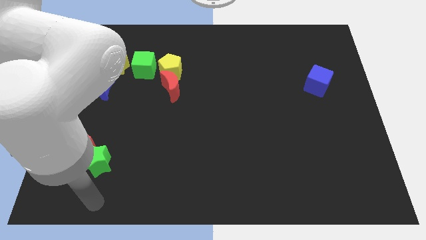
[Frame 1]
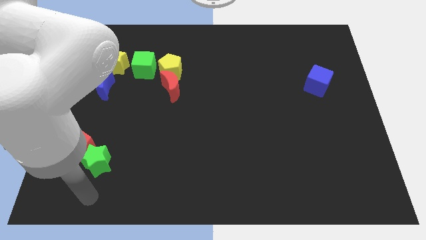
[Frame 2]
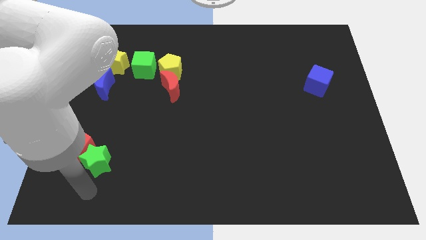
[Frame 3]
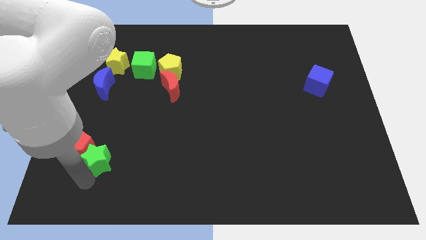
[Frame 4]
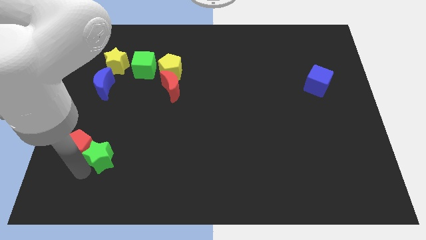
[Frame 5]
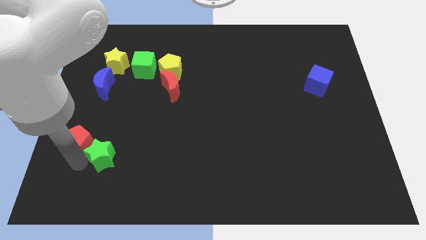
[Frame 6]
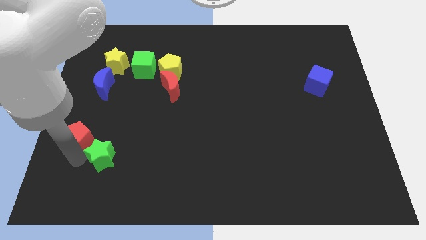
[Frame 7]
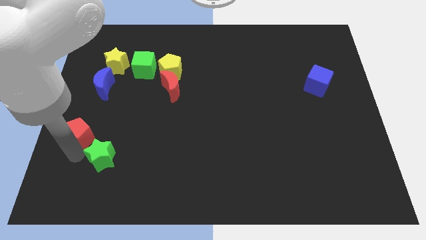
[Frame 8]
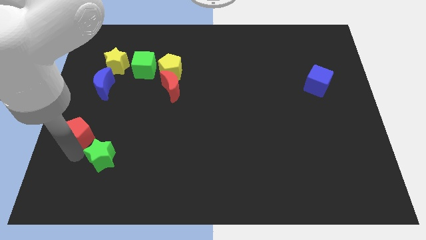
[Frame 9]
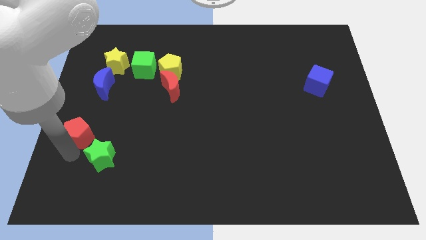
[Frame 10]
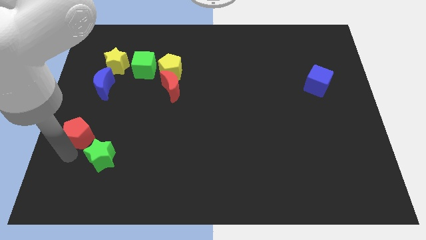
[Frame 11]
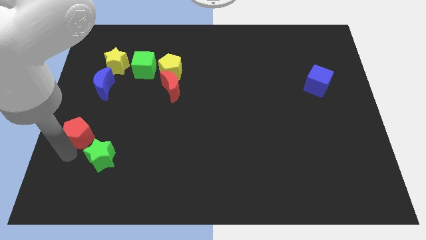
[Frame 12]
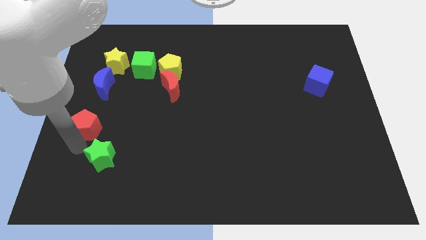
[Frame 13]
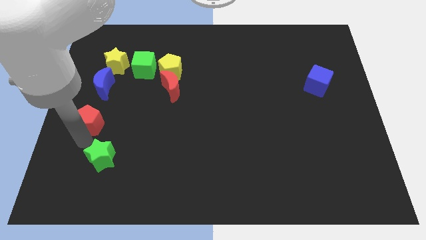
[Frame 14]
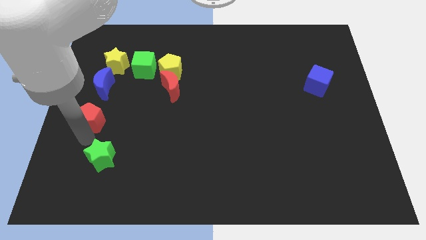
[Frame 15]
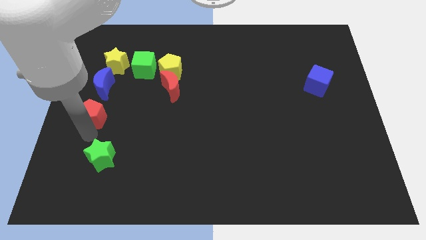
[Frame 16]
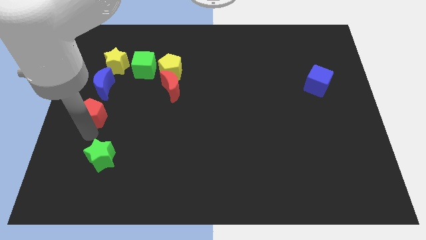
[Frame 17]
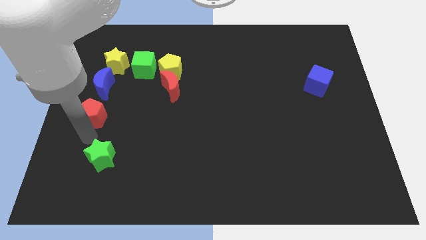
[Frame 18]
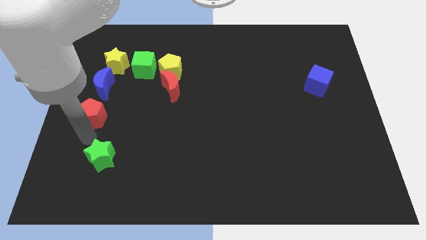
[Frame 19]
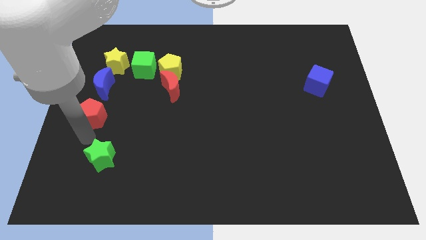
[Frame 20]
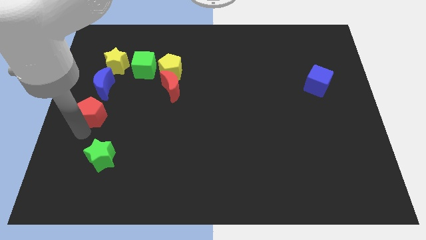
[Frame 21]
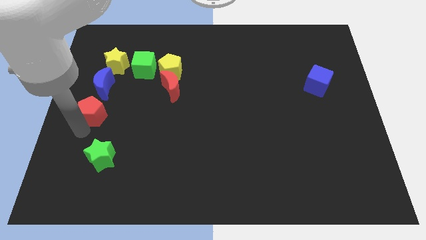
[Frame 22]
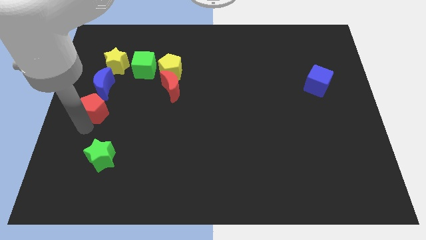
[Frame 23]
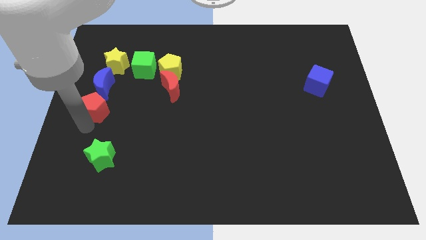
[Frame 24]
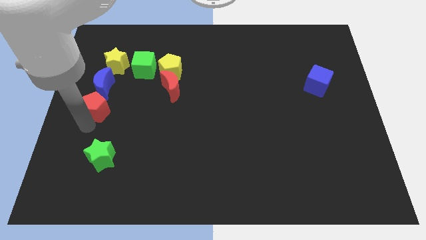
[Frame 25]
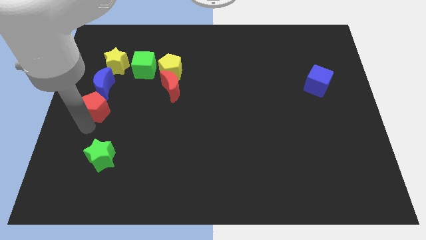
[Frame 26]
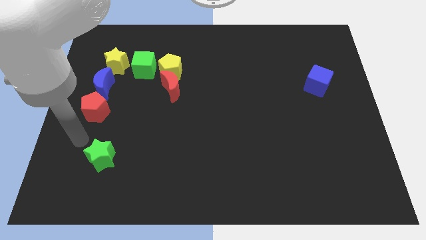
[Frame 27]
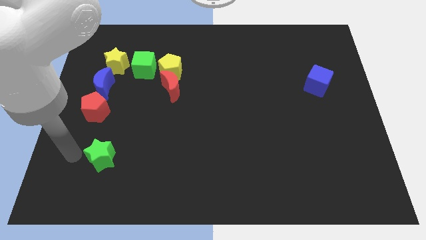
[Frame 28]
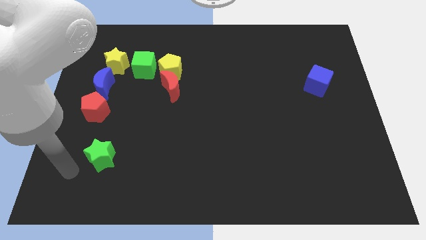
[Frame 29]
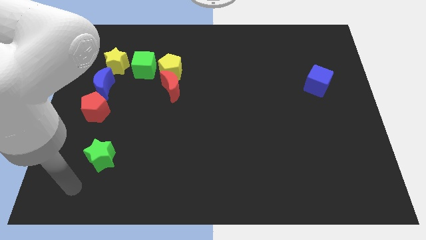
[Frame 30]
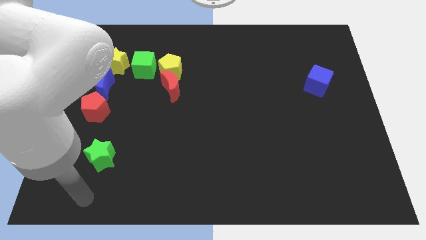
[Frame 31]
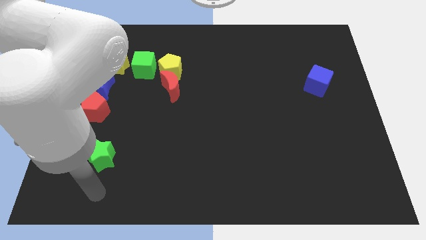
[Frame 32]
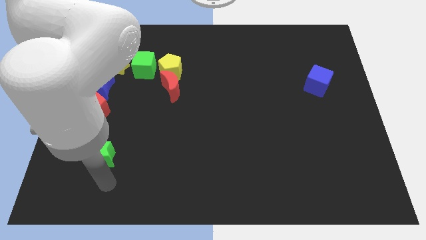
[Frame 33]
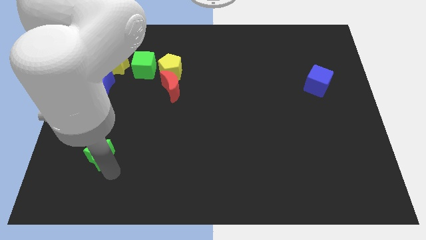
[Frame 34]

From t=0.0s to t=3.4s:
place red pentagon at the bottom of the blue moon

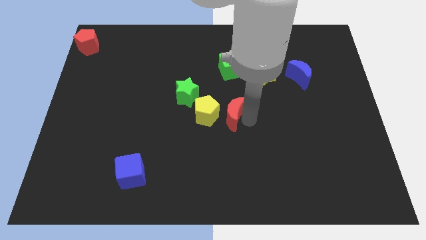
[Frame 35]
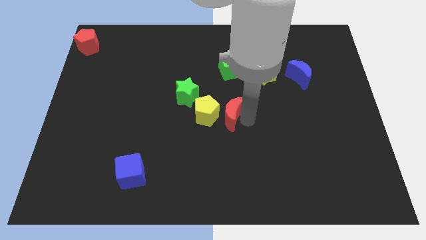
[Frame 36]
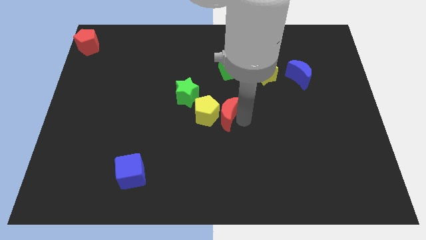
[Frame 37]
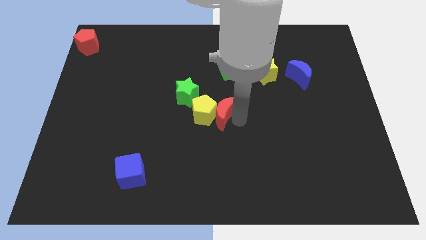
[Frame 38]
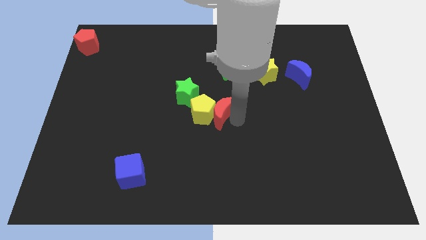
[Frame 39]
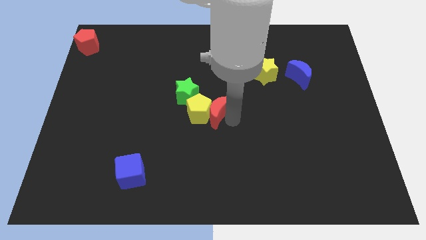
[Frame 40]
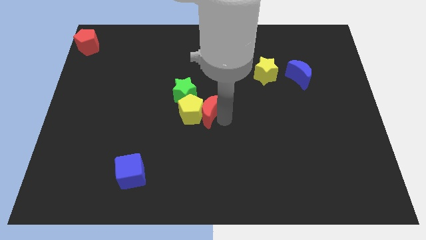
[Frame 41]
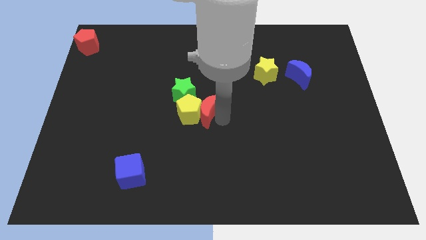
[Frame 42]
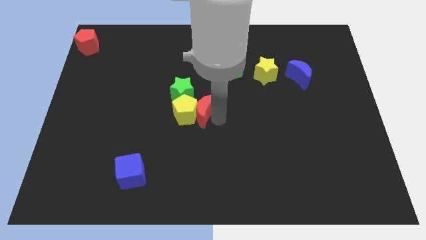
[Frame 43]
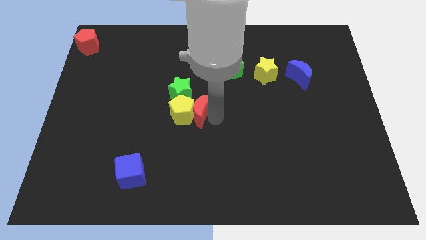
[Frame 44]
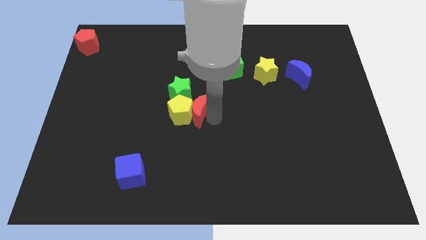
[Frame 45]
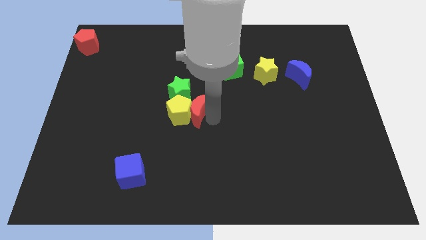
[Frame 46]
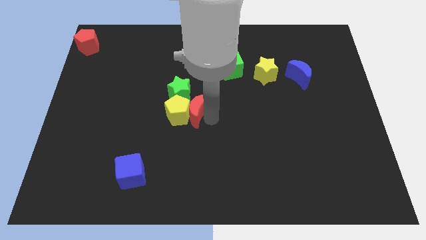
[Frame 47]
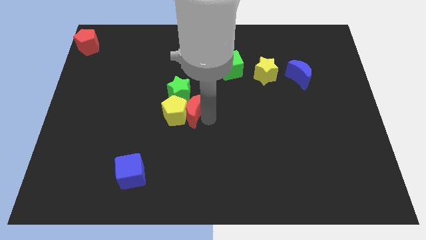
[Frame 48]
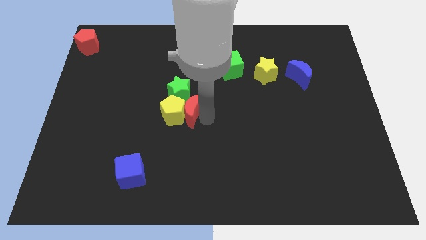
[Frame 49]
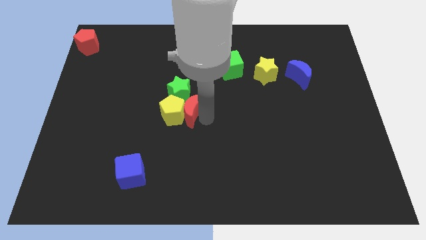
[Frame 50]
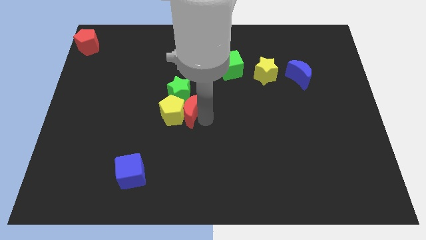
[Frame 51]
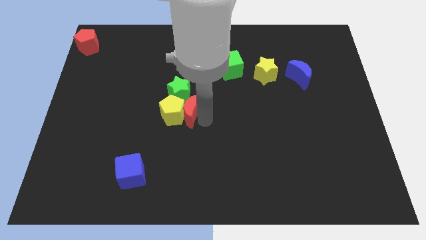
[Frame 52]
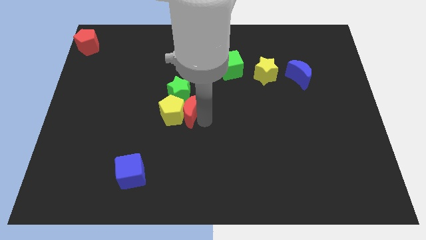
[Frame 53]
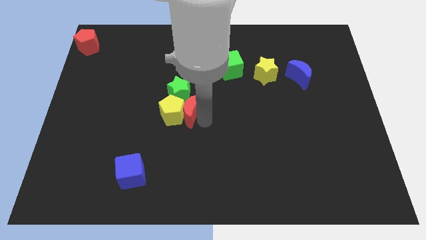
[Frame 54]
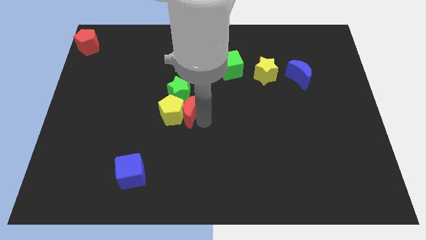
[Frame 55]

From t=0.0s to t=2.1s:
push the red crescent into the yellow pentagon

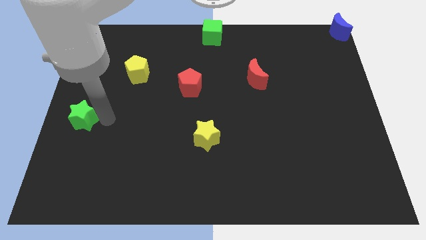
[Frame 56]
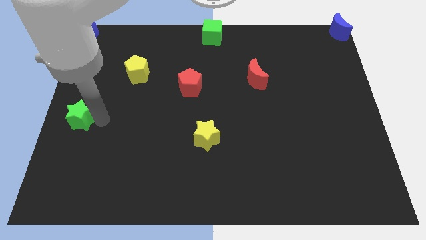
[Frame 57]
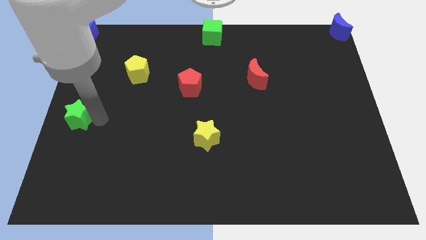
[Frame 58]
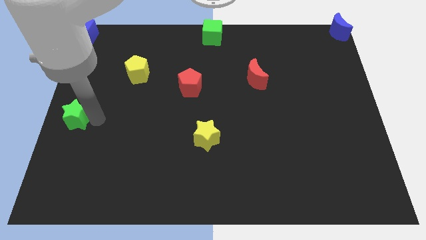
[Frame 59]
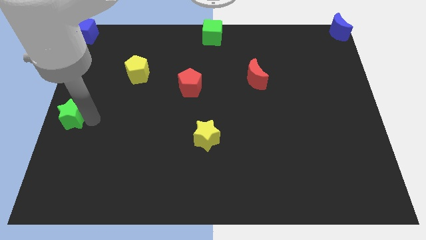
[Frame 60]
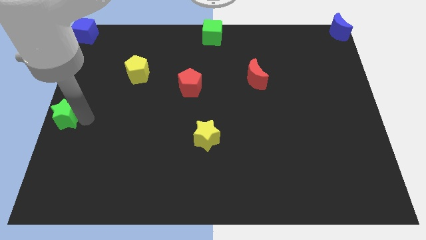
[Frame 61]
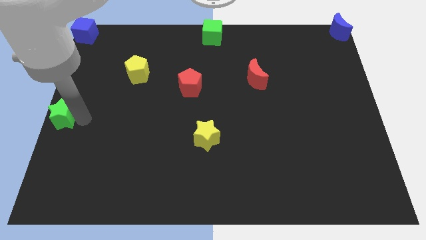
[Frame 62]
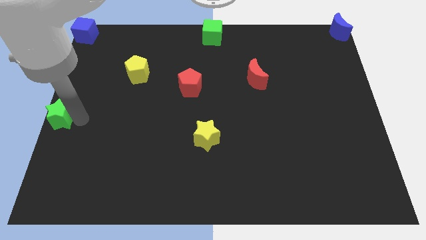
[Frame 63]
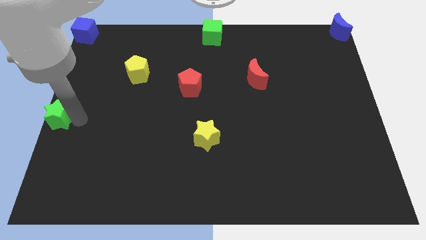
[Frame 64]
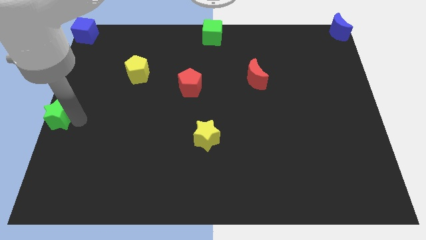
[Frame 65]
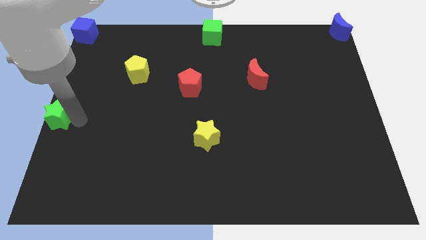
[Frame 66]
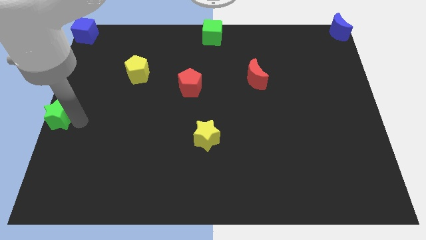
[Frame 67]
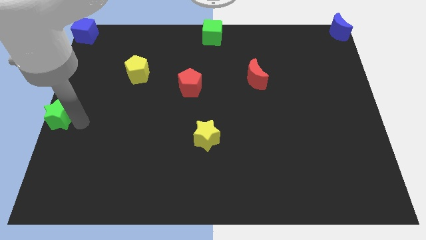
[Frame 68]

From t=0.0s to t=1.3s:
move the green star to the left center of the board

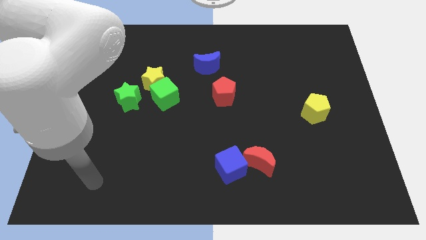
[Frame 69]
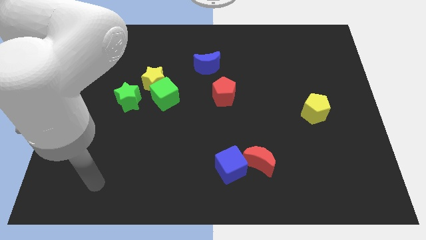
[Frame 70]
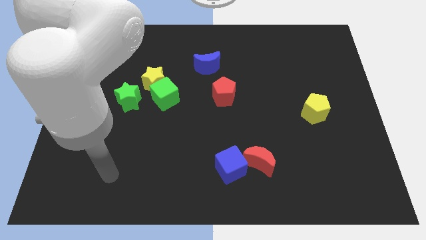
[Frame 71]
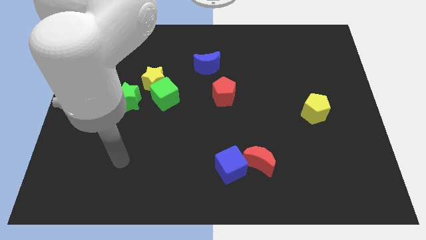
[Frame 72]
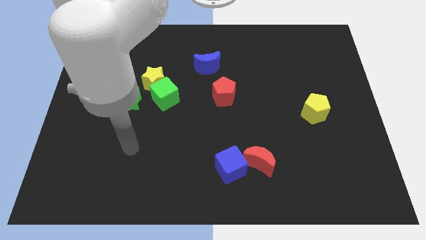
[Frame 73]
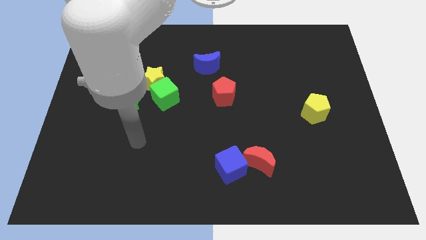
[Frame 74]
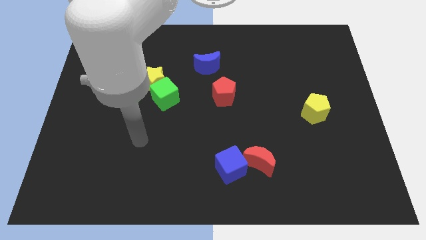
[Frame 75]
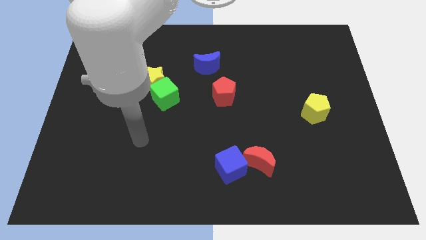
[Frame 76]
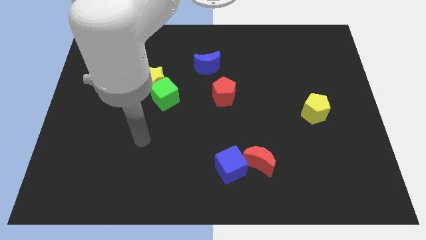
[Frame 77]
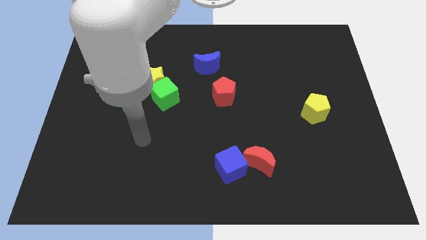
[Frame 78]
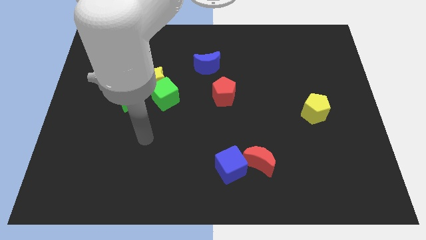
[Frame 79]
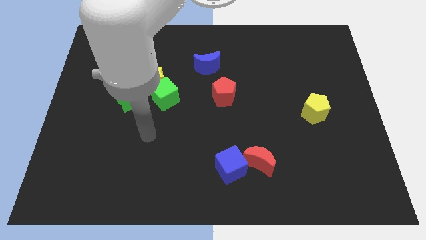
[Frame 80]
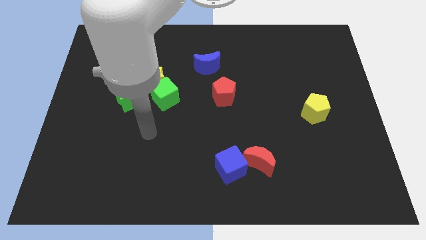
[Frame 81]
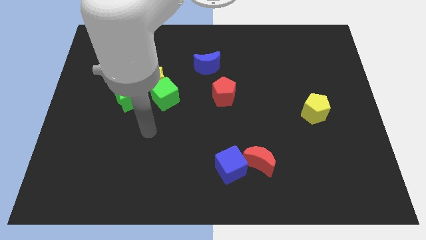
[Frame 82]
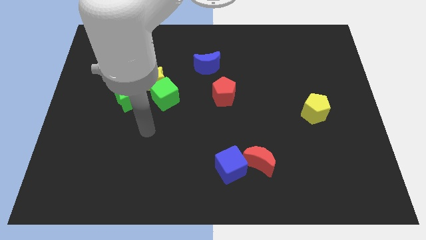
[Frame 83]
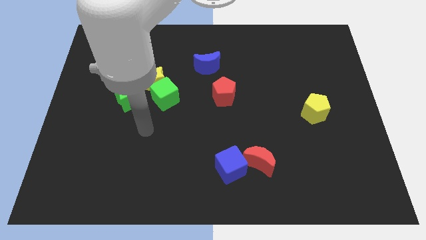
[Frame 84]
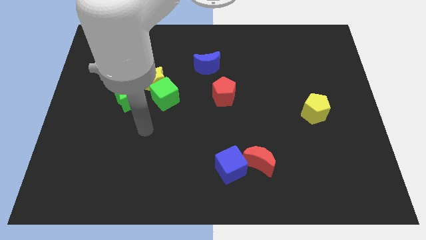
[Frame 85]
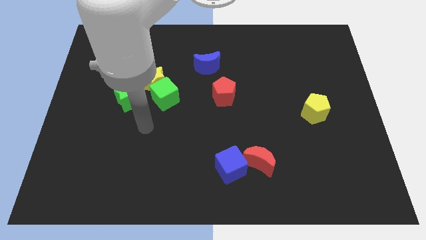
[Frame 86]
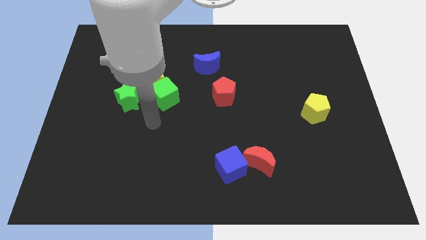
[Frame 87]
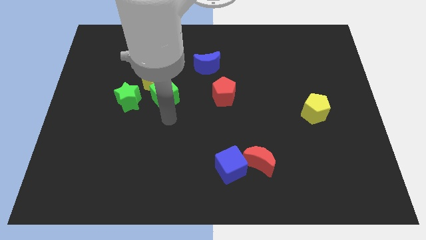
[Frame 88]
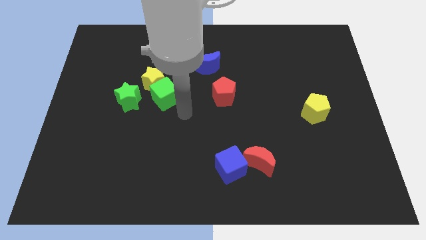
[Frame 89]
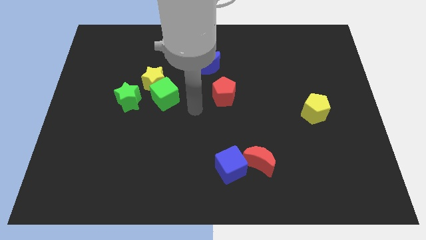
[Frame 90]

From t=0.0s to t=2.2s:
place your arm in between red pentagon and green cube
